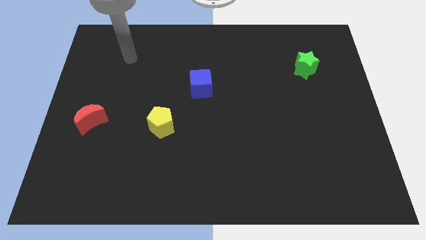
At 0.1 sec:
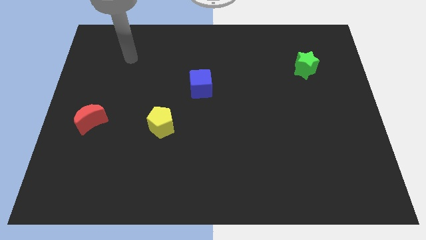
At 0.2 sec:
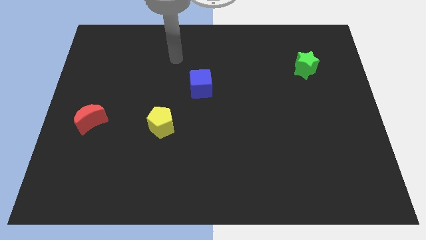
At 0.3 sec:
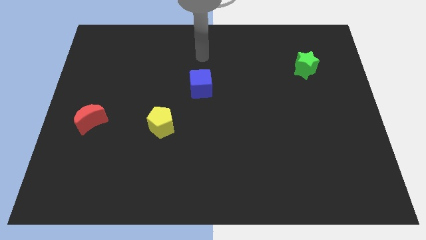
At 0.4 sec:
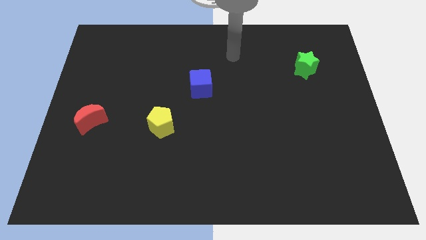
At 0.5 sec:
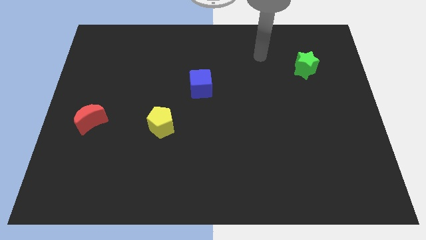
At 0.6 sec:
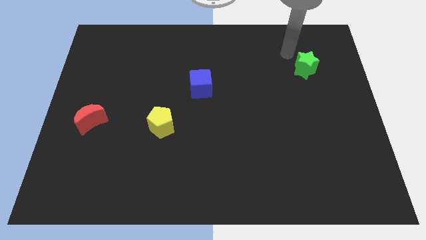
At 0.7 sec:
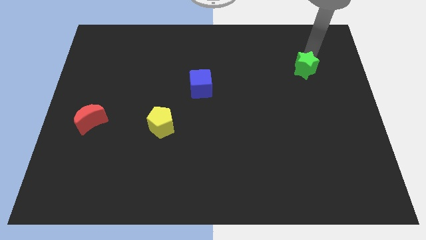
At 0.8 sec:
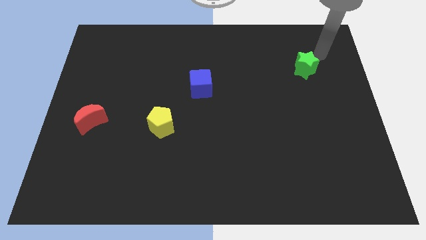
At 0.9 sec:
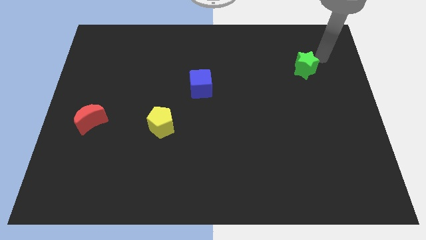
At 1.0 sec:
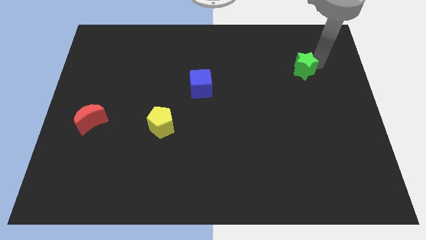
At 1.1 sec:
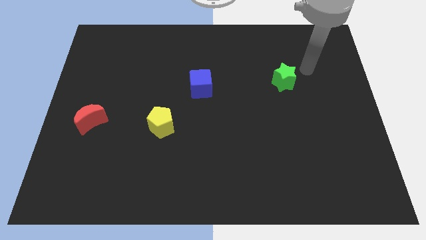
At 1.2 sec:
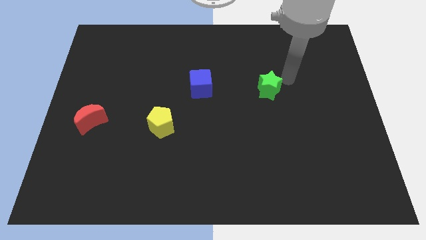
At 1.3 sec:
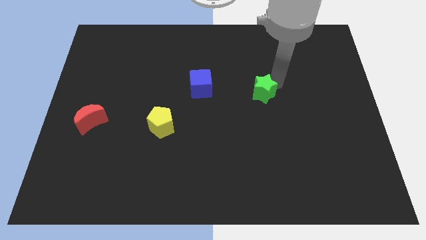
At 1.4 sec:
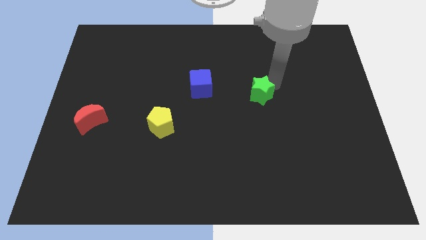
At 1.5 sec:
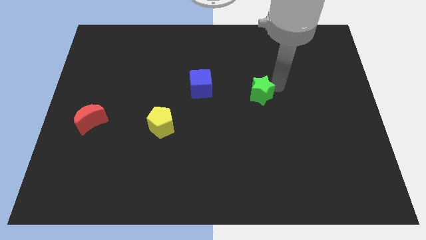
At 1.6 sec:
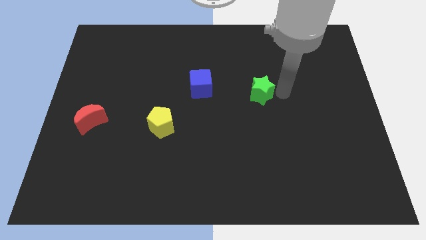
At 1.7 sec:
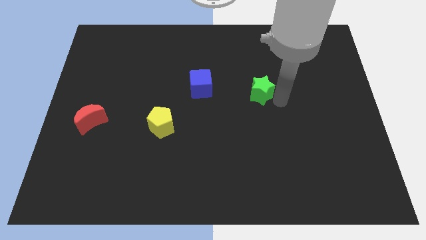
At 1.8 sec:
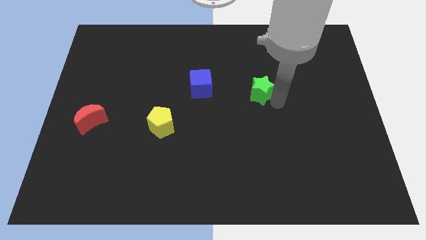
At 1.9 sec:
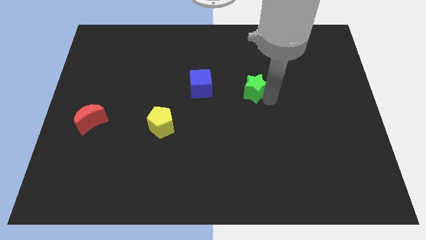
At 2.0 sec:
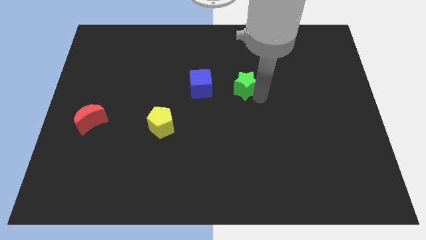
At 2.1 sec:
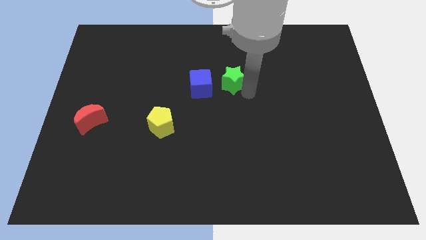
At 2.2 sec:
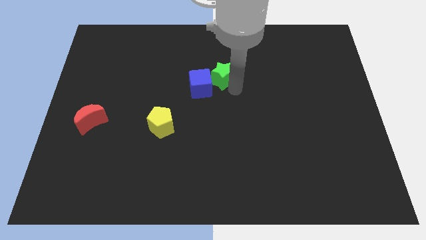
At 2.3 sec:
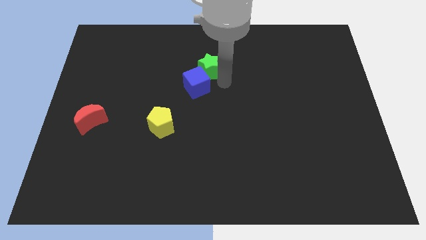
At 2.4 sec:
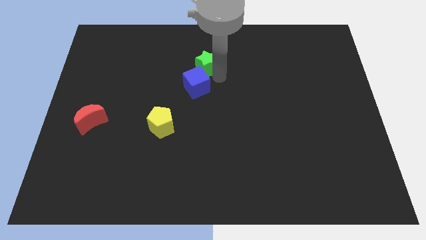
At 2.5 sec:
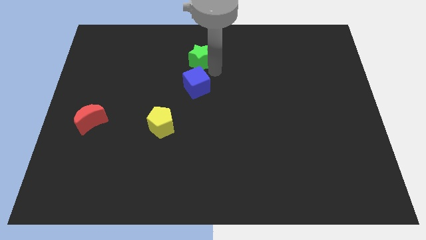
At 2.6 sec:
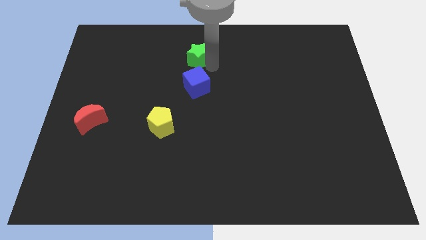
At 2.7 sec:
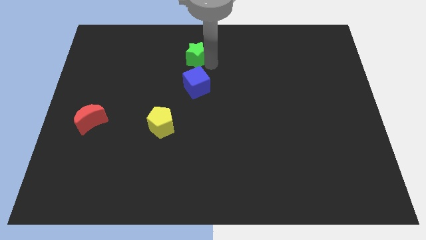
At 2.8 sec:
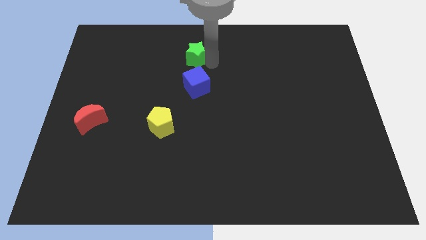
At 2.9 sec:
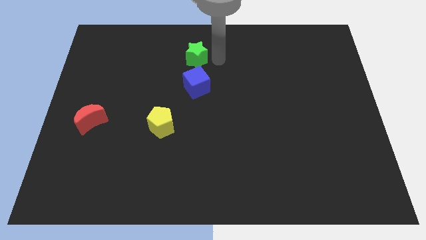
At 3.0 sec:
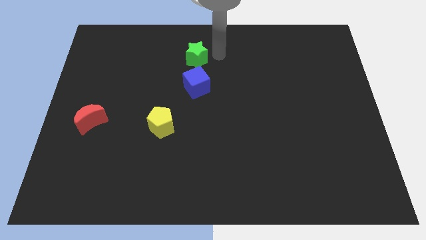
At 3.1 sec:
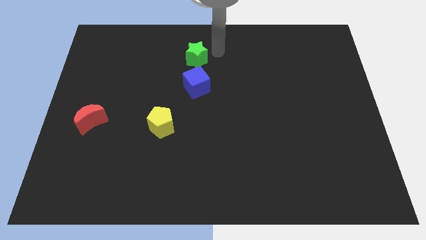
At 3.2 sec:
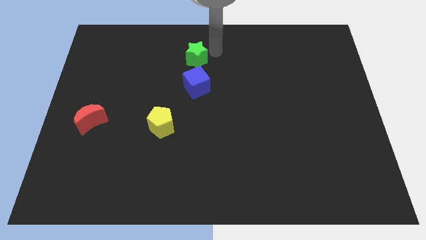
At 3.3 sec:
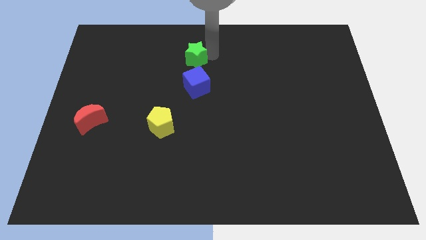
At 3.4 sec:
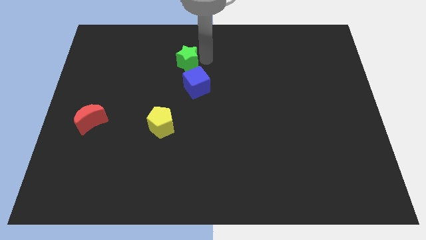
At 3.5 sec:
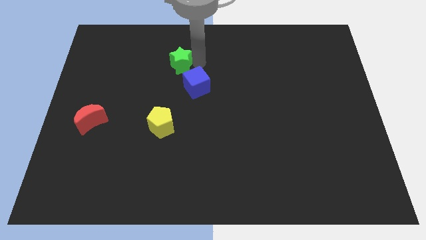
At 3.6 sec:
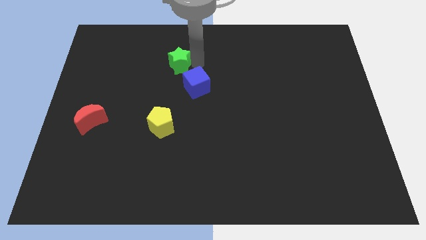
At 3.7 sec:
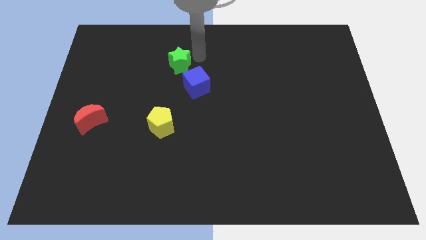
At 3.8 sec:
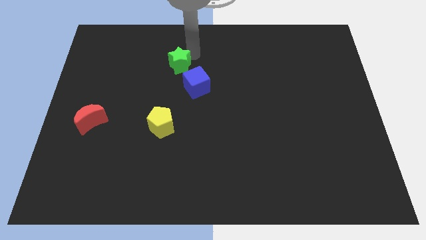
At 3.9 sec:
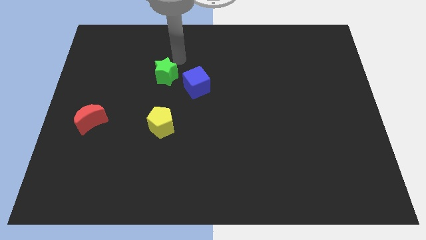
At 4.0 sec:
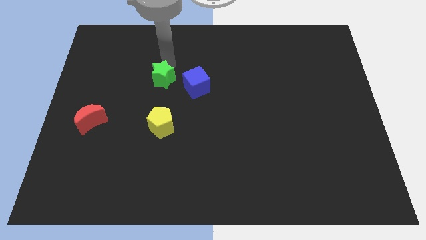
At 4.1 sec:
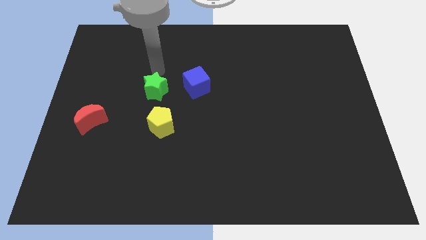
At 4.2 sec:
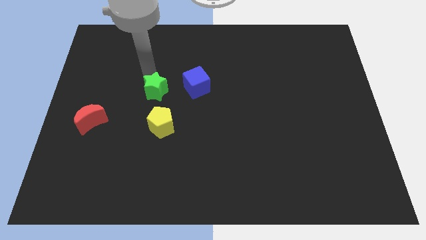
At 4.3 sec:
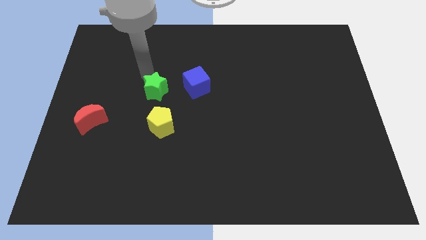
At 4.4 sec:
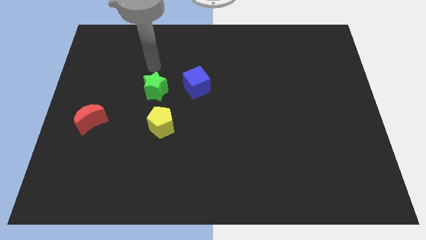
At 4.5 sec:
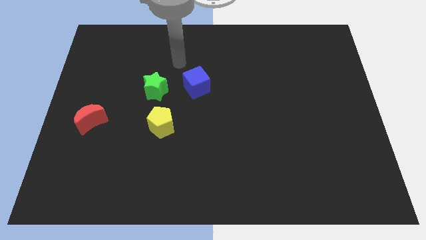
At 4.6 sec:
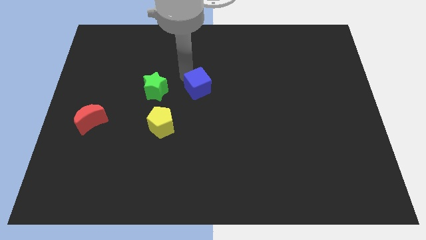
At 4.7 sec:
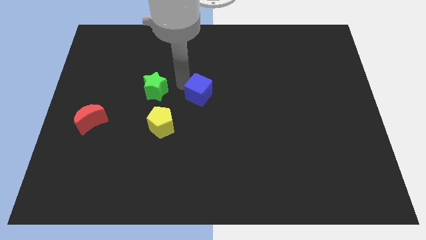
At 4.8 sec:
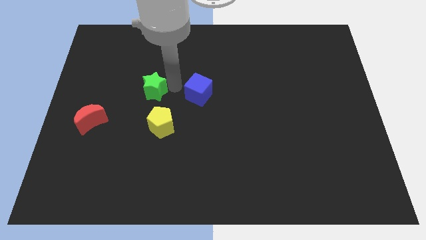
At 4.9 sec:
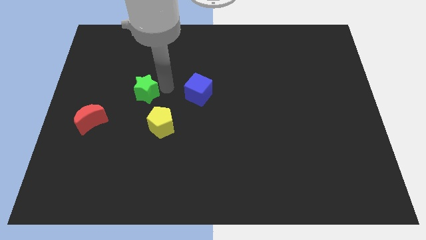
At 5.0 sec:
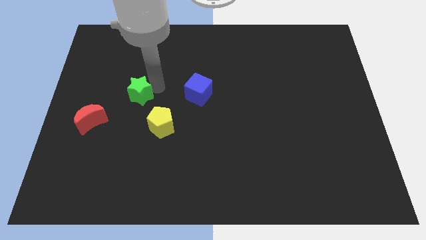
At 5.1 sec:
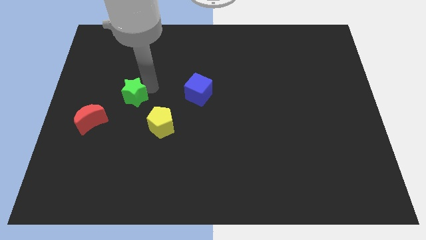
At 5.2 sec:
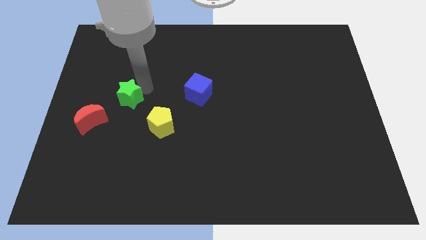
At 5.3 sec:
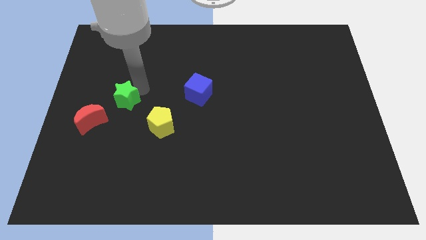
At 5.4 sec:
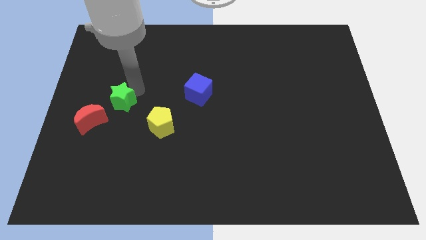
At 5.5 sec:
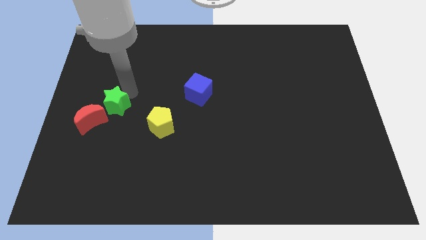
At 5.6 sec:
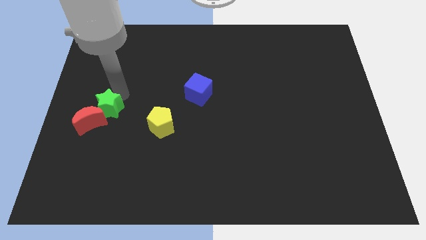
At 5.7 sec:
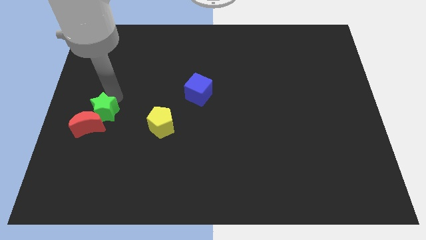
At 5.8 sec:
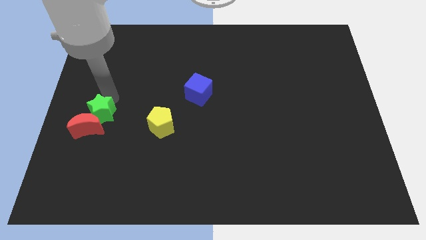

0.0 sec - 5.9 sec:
slide the green block next to the moon

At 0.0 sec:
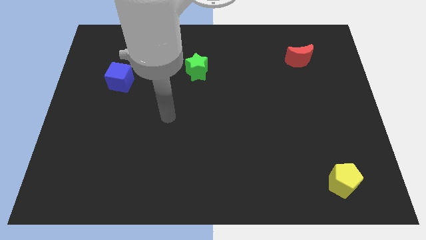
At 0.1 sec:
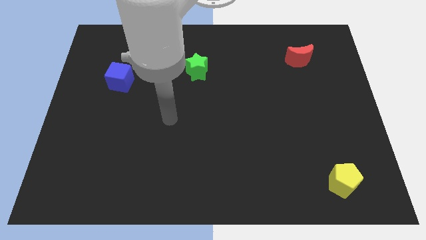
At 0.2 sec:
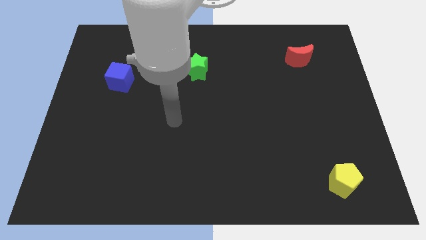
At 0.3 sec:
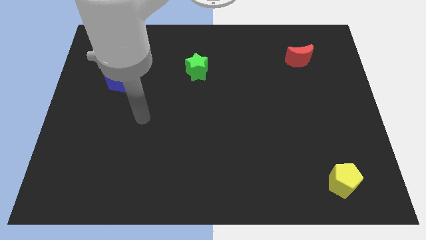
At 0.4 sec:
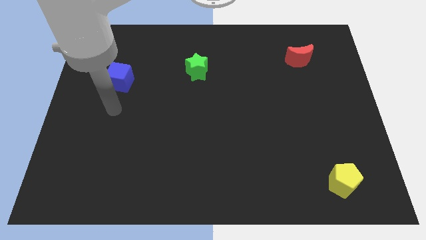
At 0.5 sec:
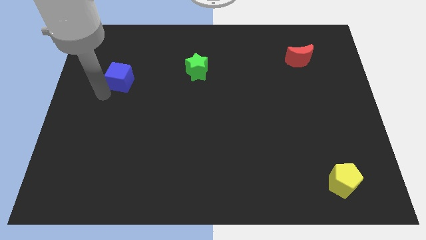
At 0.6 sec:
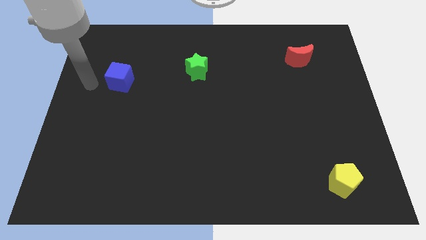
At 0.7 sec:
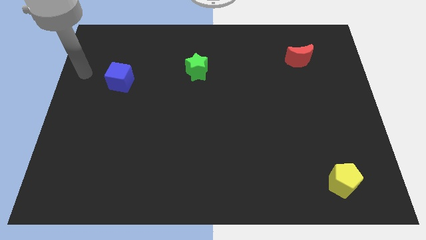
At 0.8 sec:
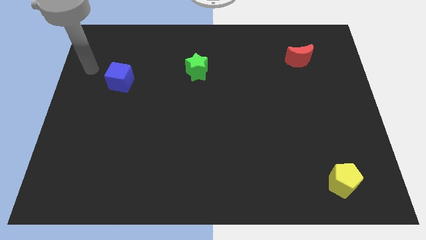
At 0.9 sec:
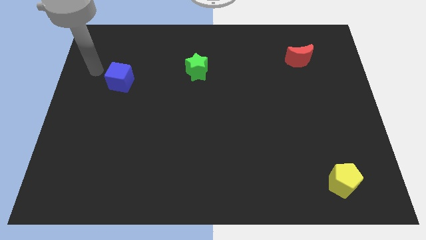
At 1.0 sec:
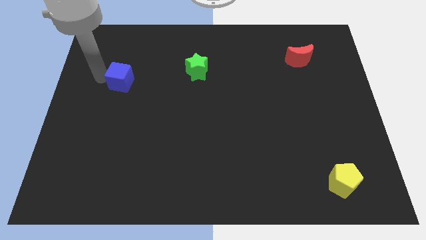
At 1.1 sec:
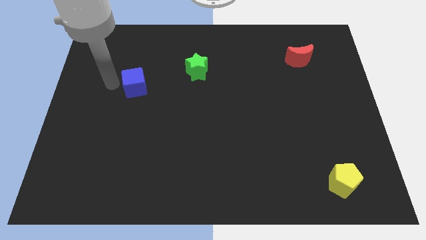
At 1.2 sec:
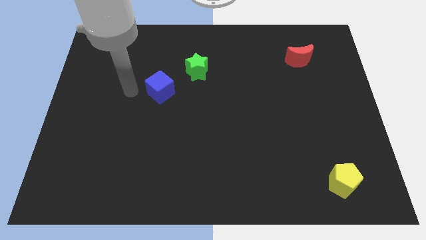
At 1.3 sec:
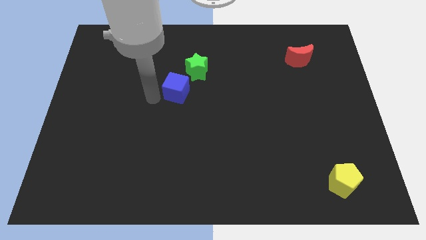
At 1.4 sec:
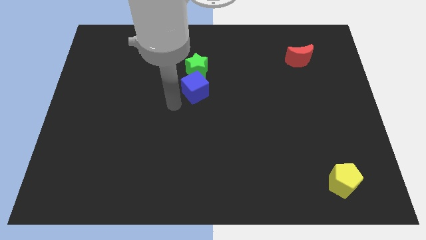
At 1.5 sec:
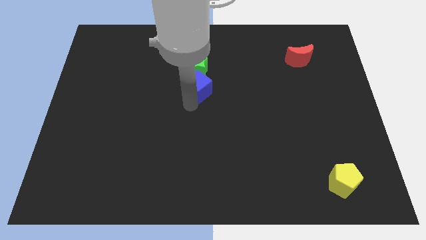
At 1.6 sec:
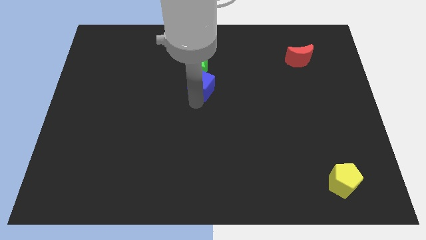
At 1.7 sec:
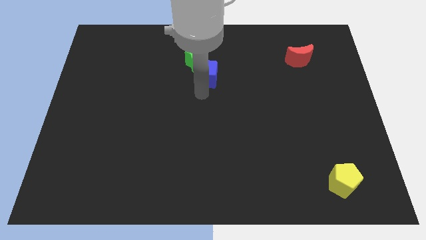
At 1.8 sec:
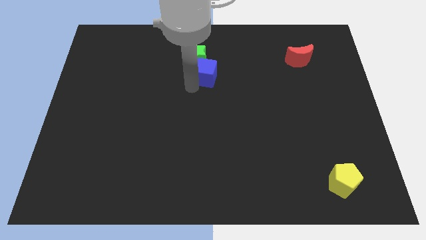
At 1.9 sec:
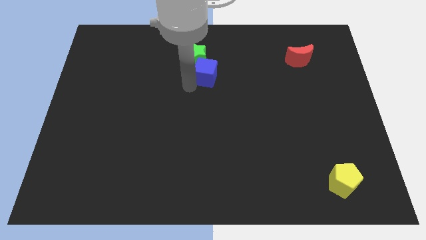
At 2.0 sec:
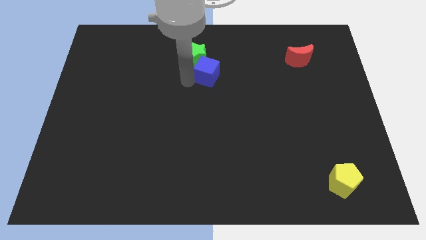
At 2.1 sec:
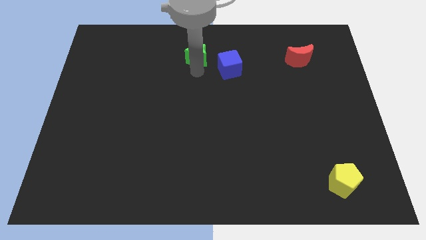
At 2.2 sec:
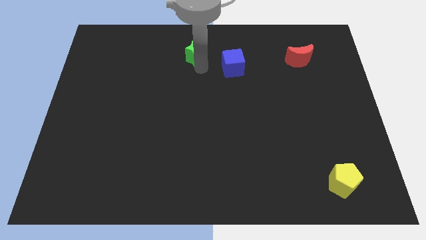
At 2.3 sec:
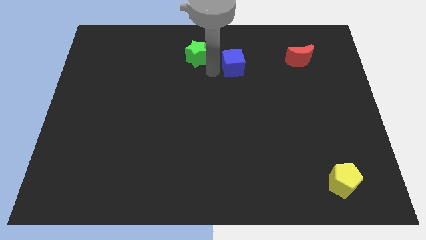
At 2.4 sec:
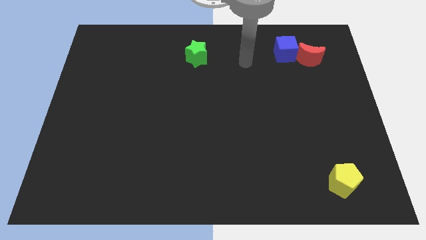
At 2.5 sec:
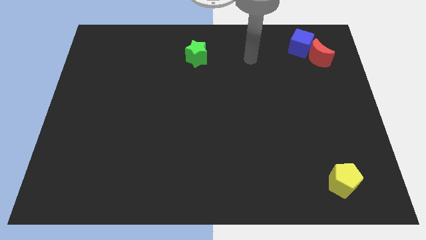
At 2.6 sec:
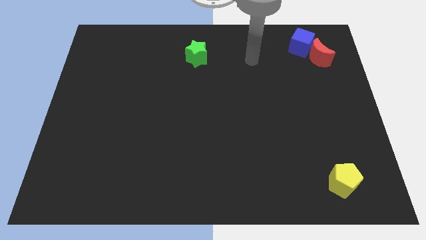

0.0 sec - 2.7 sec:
put the blue cube close to the red block
